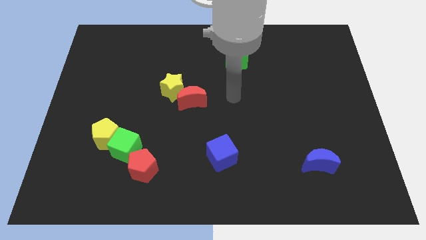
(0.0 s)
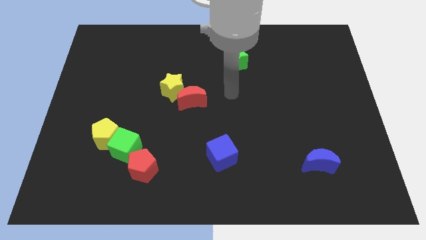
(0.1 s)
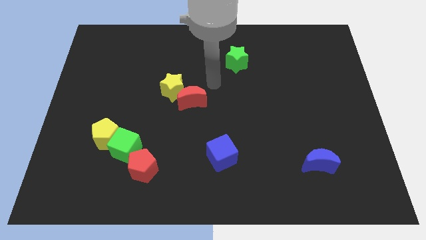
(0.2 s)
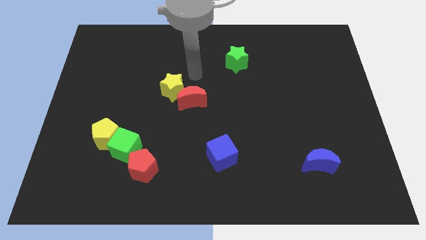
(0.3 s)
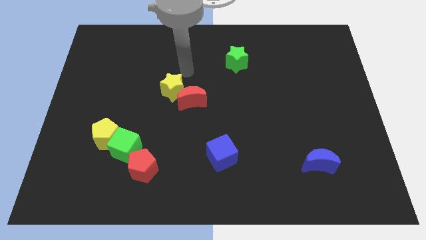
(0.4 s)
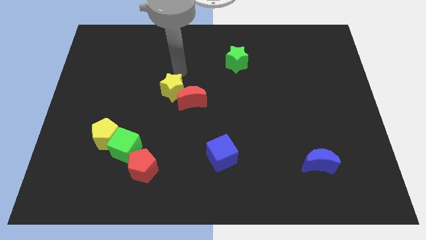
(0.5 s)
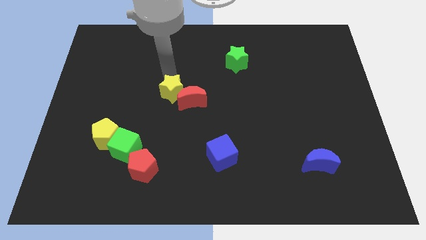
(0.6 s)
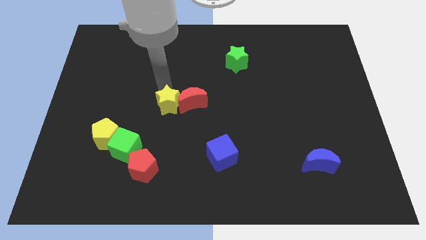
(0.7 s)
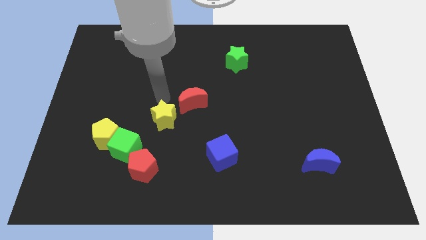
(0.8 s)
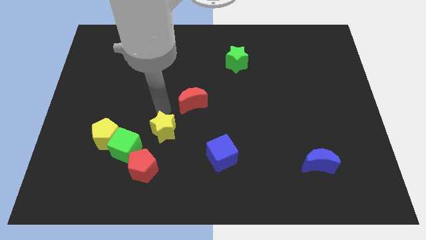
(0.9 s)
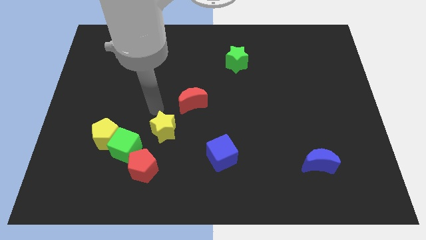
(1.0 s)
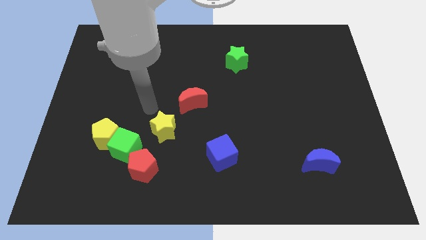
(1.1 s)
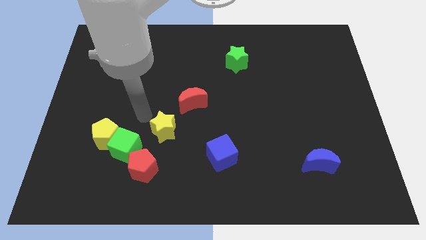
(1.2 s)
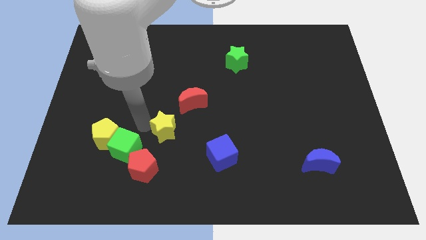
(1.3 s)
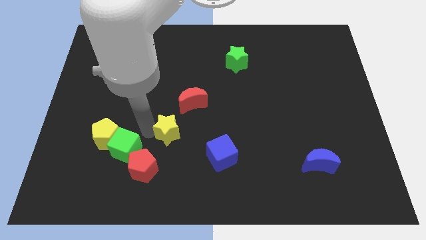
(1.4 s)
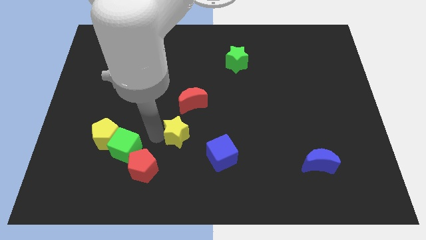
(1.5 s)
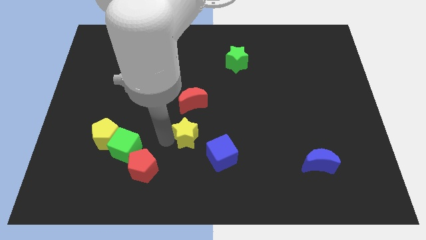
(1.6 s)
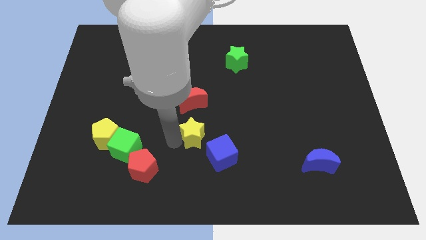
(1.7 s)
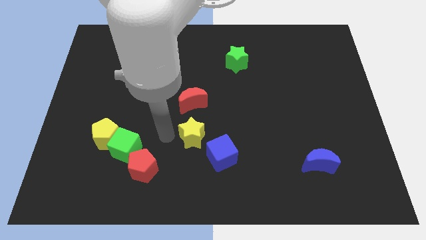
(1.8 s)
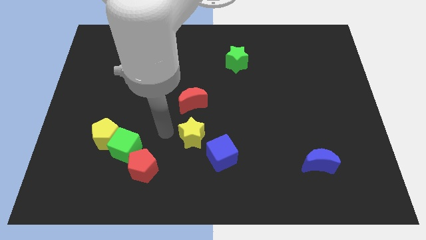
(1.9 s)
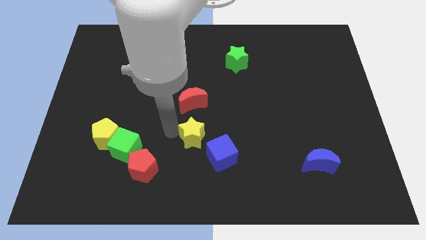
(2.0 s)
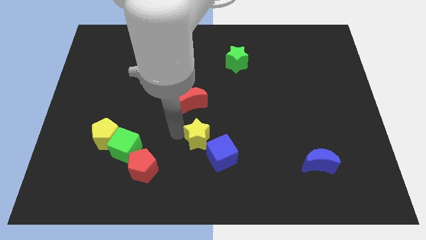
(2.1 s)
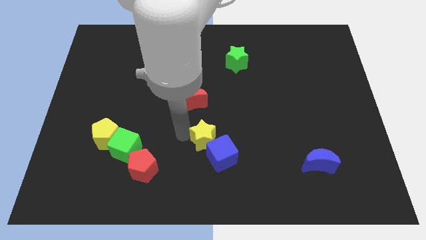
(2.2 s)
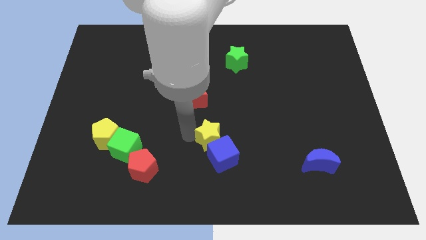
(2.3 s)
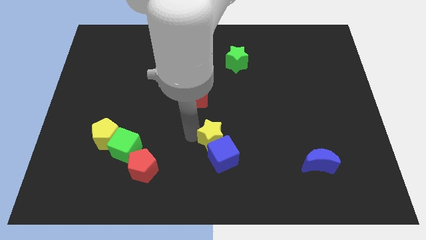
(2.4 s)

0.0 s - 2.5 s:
move the yellow star towards the blue cube

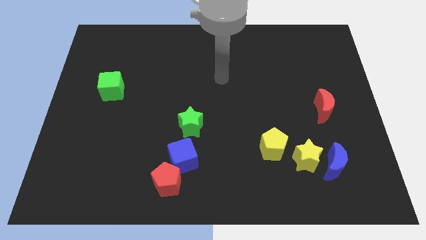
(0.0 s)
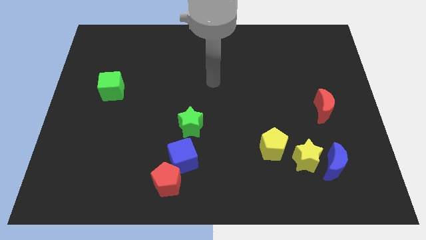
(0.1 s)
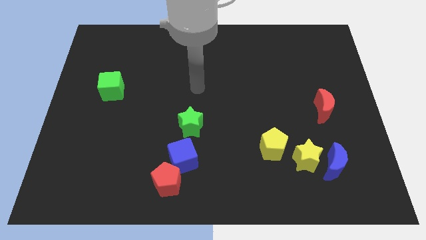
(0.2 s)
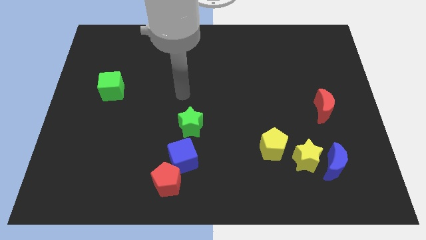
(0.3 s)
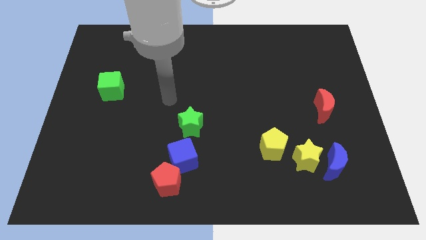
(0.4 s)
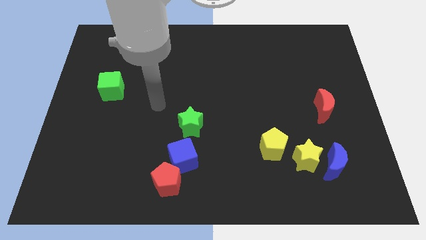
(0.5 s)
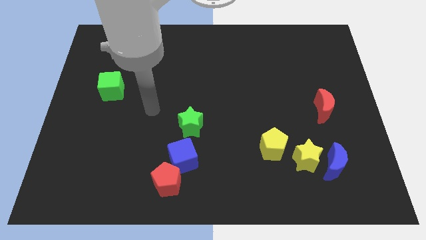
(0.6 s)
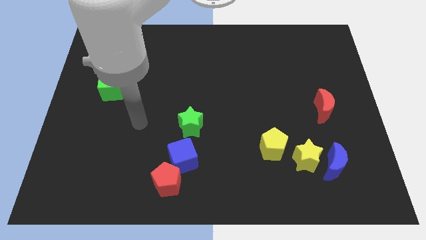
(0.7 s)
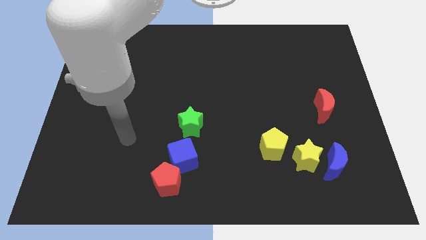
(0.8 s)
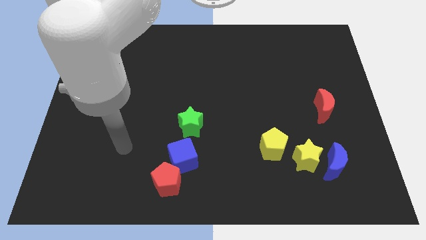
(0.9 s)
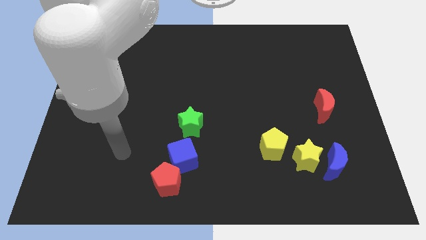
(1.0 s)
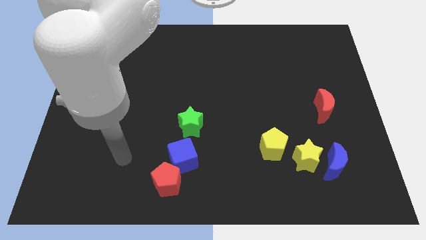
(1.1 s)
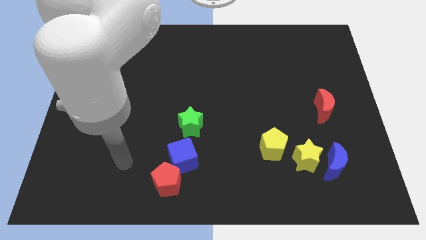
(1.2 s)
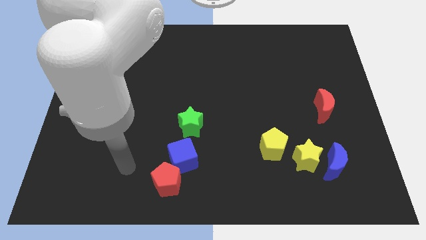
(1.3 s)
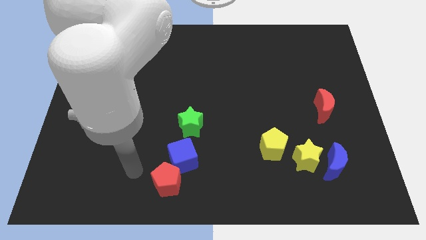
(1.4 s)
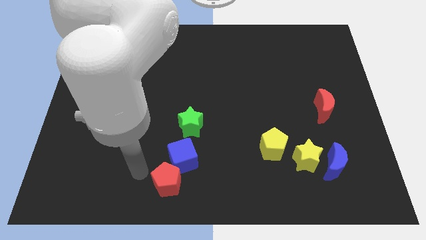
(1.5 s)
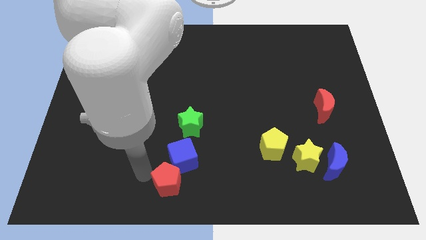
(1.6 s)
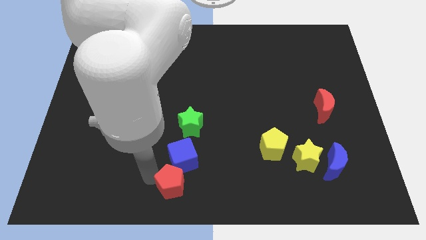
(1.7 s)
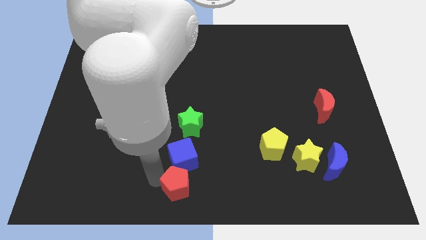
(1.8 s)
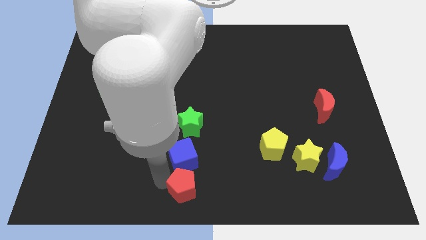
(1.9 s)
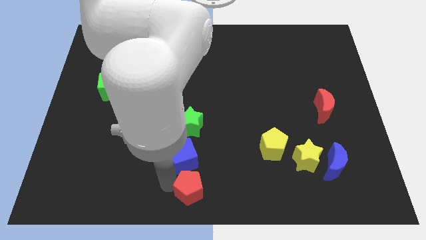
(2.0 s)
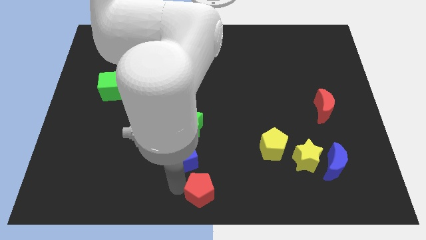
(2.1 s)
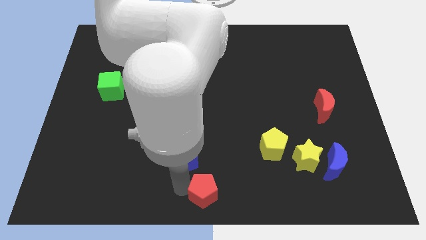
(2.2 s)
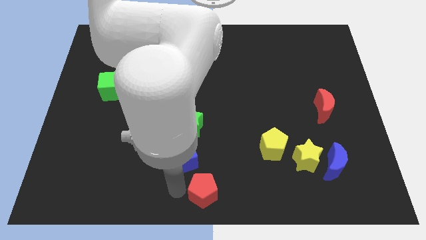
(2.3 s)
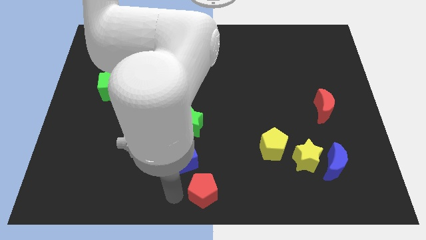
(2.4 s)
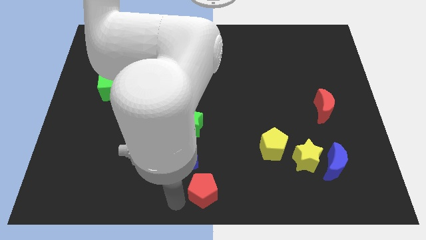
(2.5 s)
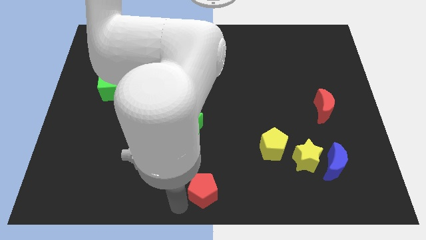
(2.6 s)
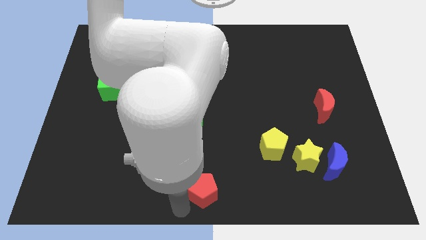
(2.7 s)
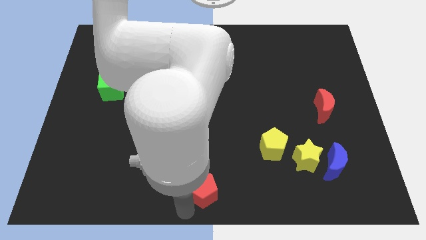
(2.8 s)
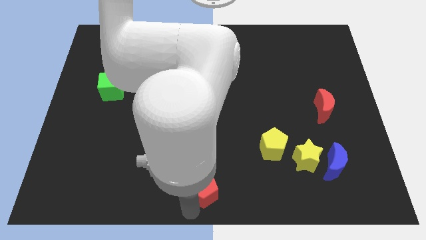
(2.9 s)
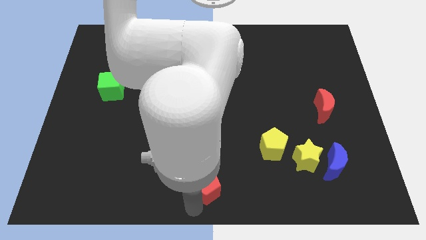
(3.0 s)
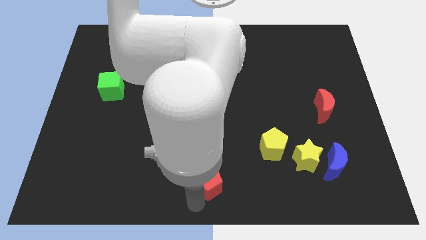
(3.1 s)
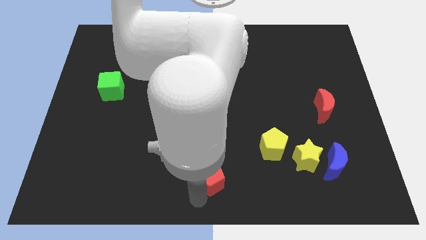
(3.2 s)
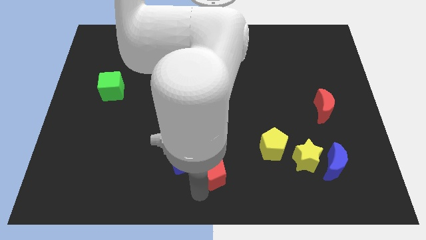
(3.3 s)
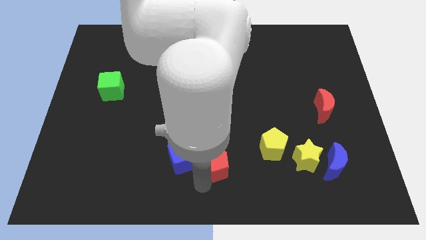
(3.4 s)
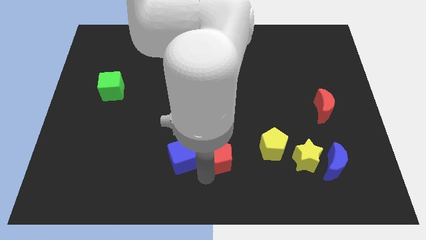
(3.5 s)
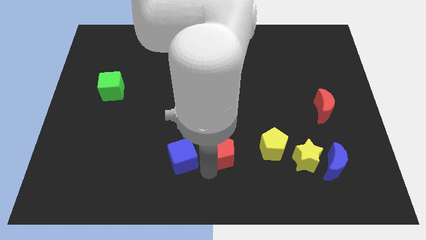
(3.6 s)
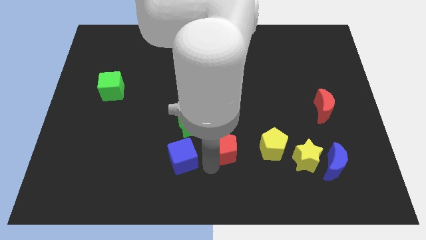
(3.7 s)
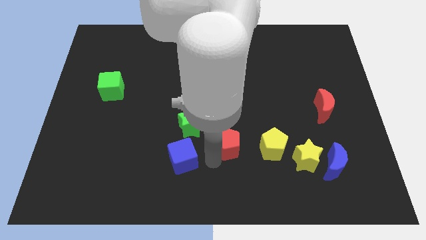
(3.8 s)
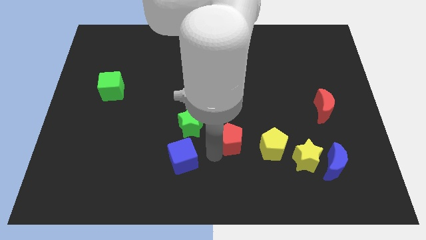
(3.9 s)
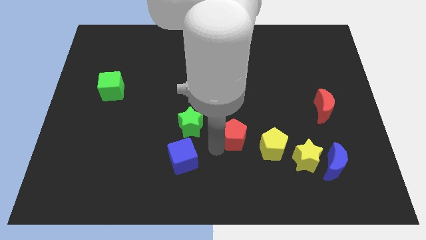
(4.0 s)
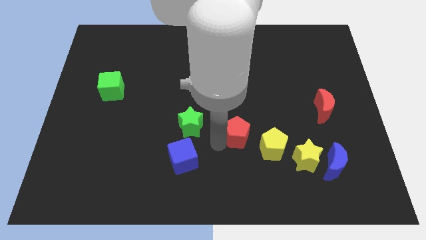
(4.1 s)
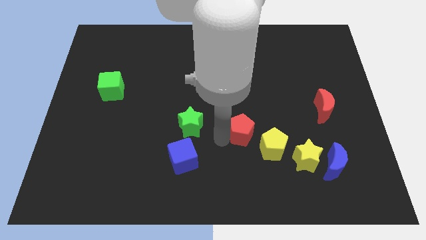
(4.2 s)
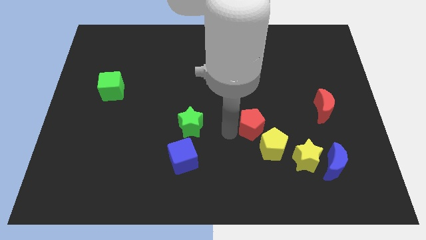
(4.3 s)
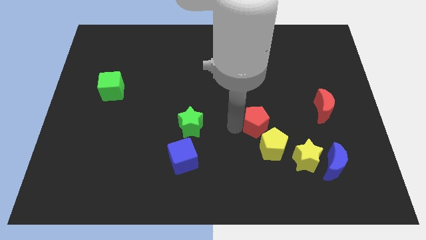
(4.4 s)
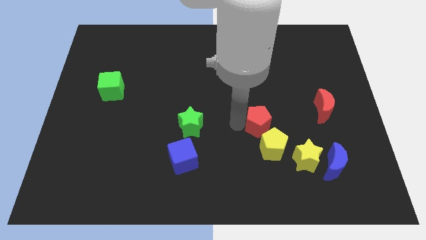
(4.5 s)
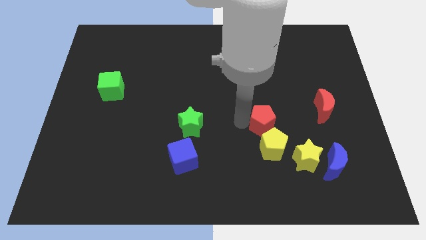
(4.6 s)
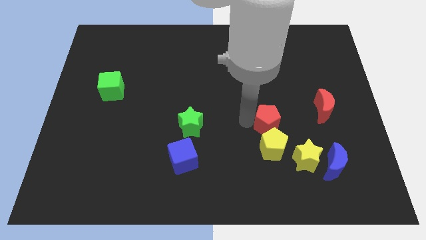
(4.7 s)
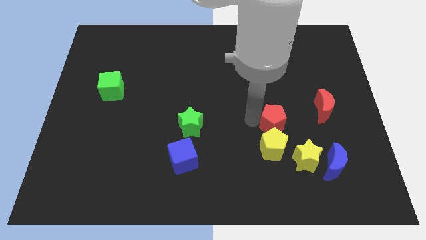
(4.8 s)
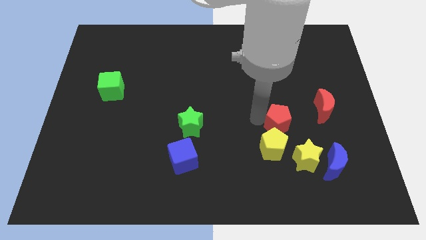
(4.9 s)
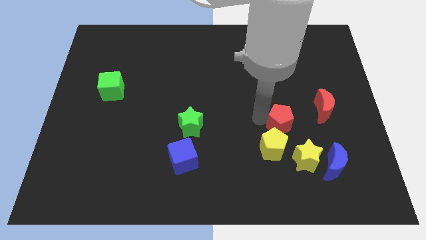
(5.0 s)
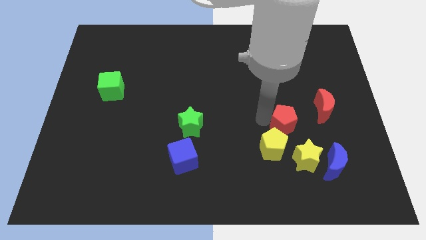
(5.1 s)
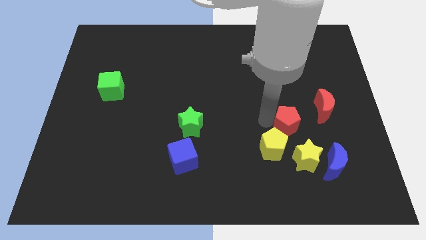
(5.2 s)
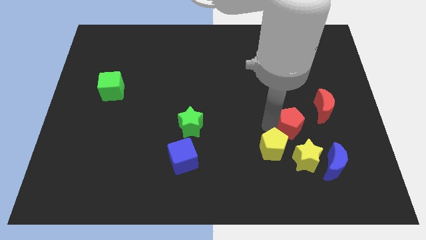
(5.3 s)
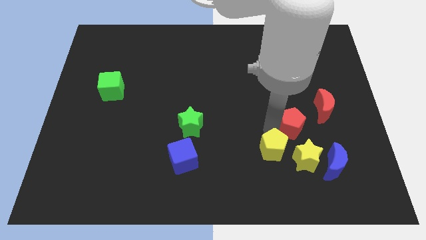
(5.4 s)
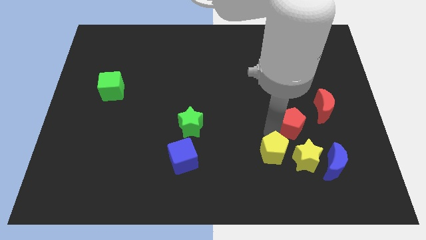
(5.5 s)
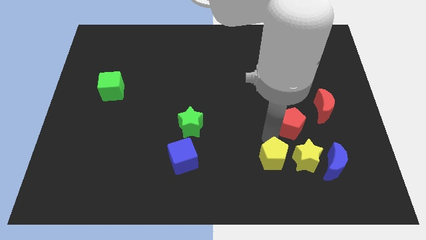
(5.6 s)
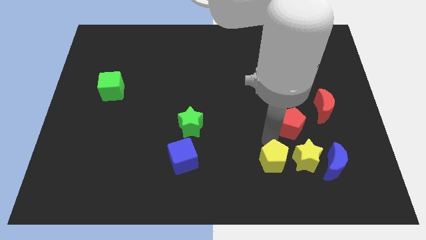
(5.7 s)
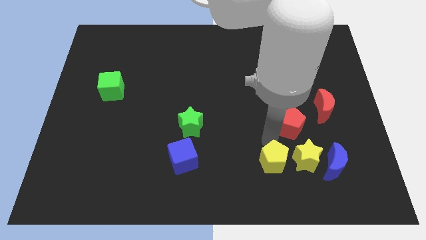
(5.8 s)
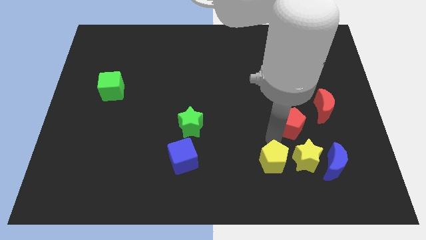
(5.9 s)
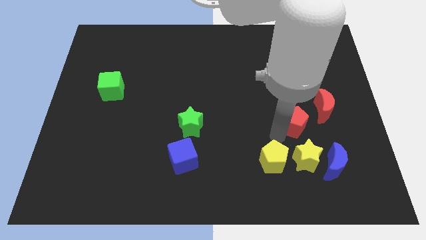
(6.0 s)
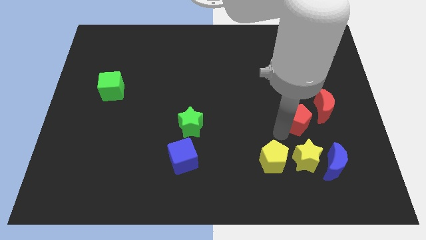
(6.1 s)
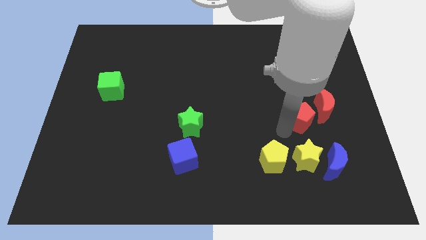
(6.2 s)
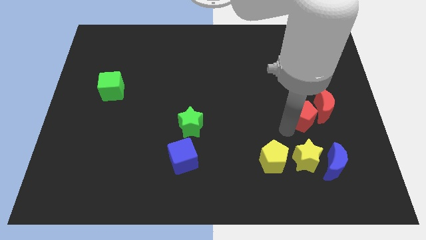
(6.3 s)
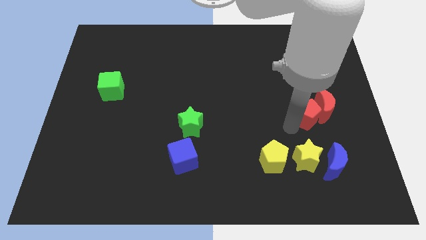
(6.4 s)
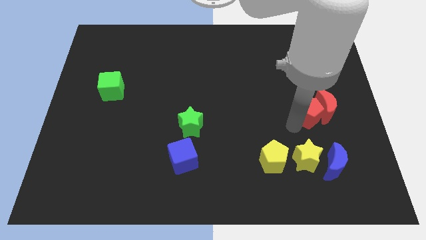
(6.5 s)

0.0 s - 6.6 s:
push the red pentagon towards the red moon
